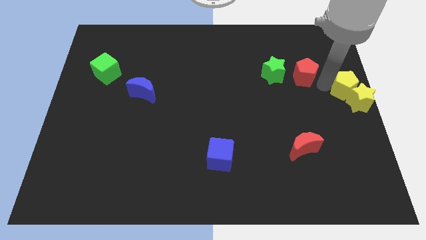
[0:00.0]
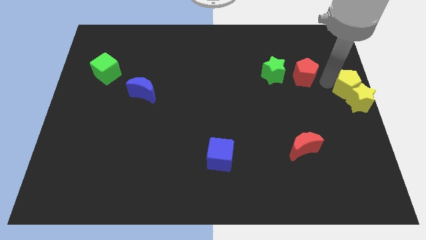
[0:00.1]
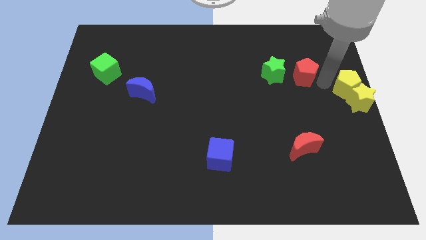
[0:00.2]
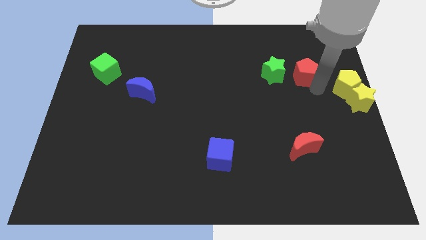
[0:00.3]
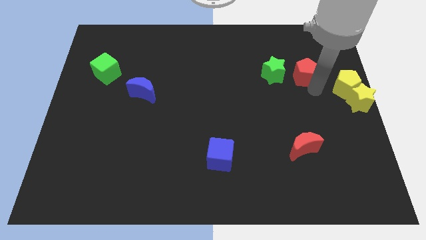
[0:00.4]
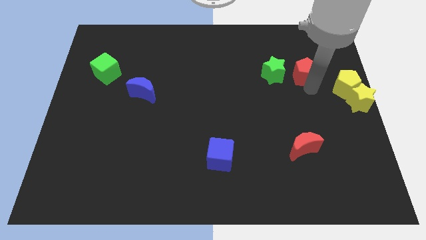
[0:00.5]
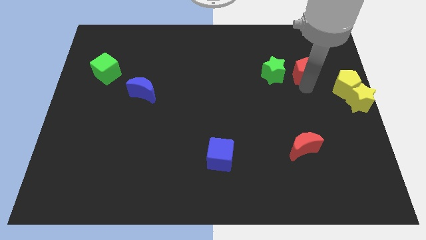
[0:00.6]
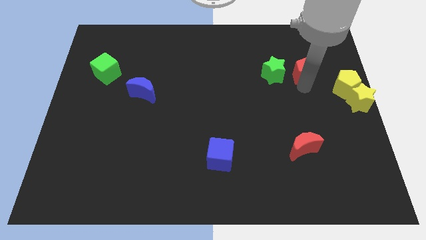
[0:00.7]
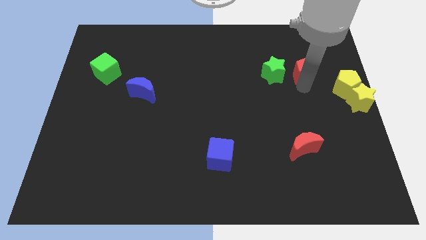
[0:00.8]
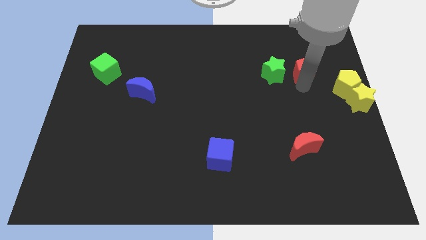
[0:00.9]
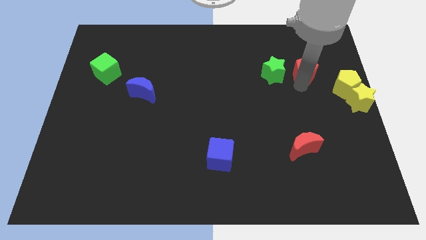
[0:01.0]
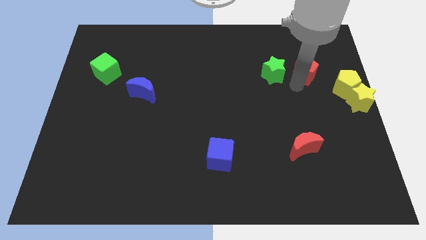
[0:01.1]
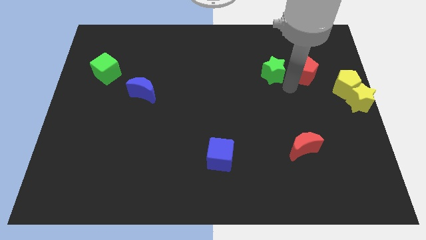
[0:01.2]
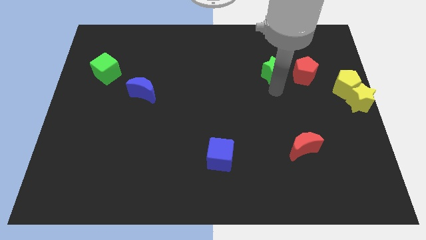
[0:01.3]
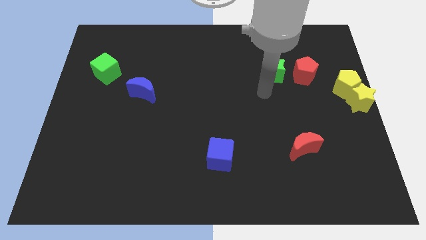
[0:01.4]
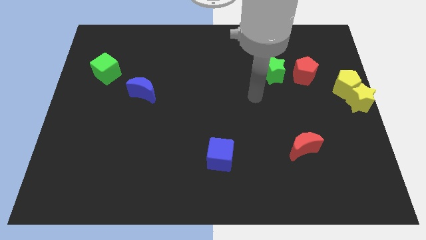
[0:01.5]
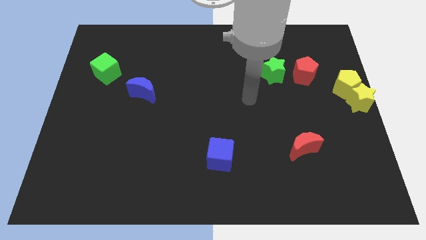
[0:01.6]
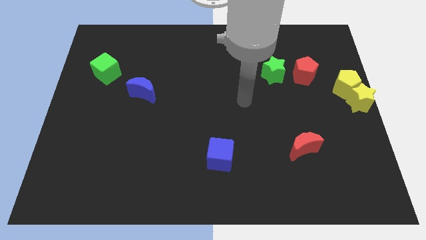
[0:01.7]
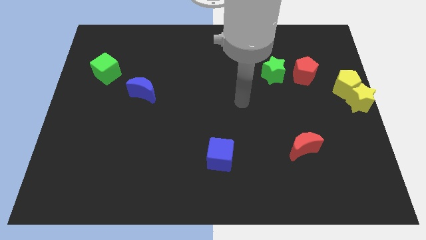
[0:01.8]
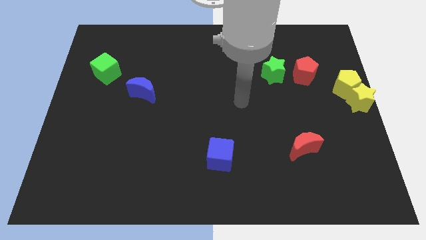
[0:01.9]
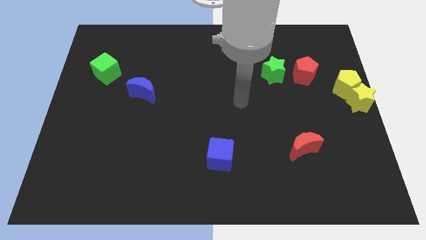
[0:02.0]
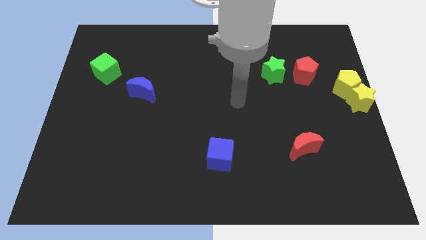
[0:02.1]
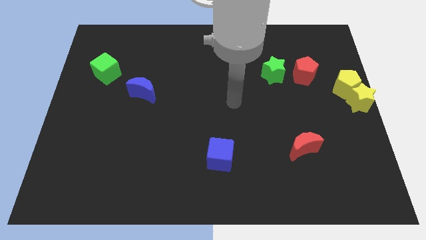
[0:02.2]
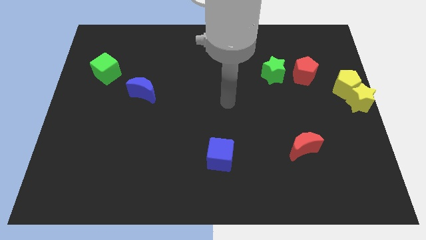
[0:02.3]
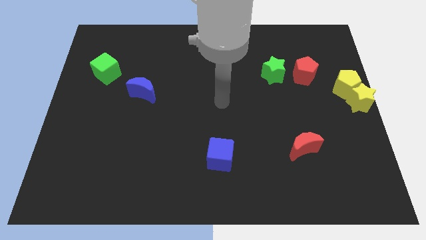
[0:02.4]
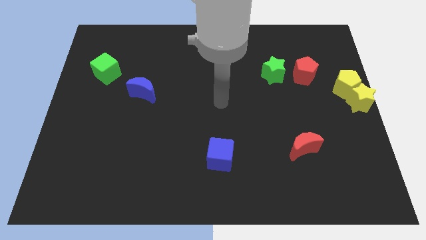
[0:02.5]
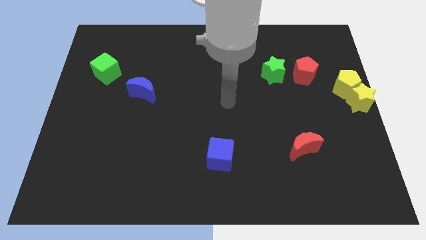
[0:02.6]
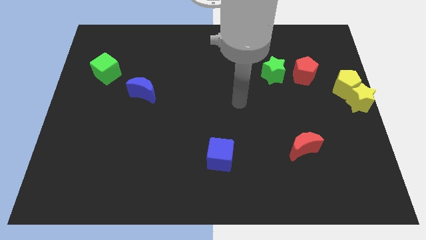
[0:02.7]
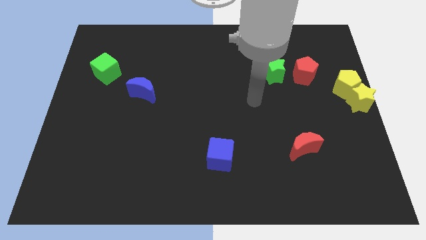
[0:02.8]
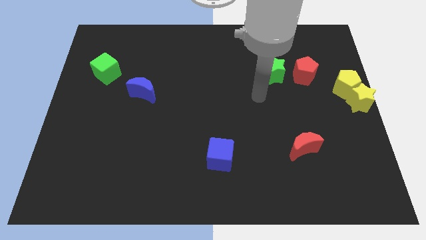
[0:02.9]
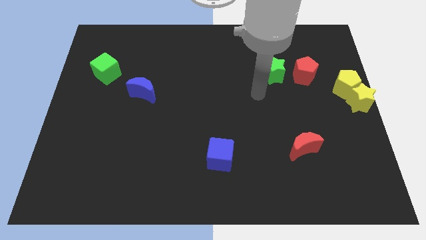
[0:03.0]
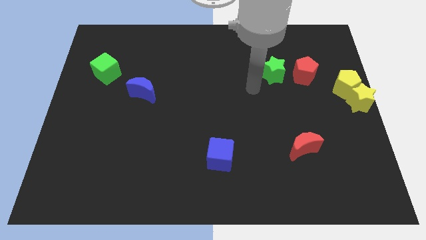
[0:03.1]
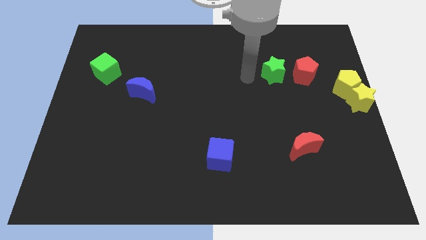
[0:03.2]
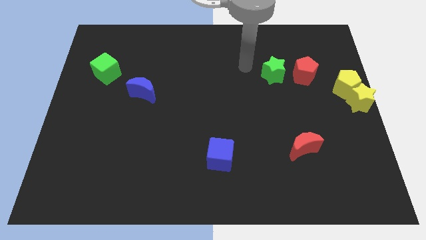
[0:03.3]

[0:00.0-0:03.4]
place your arm parallel left to the green star

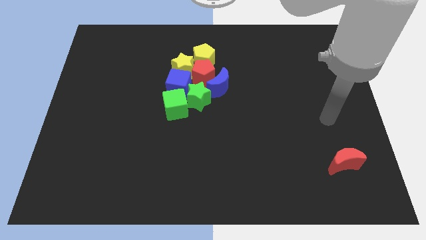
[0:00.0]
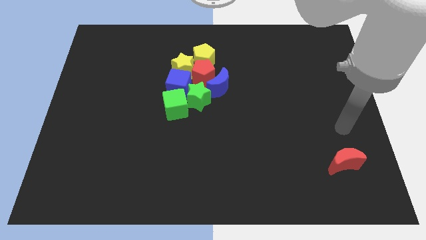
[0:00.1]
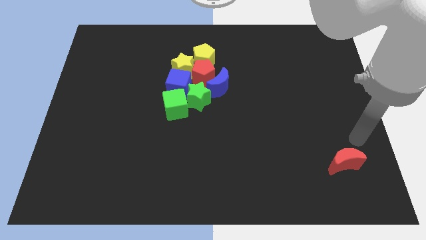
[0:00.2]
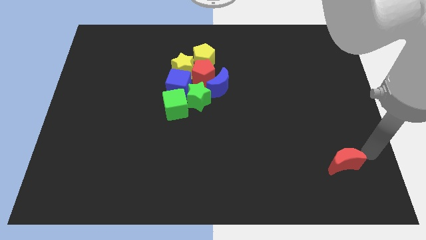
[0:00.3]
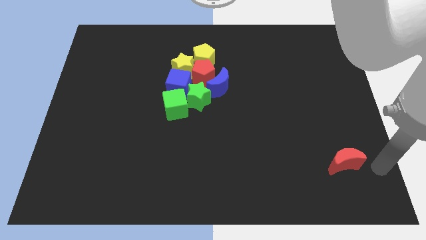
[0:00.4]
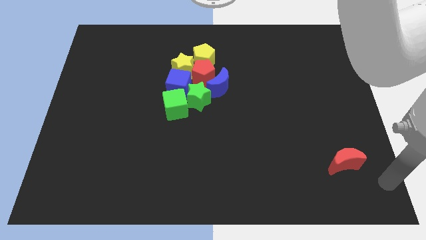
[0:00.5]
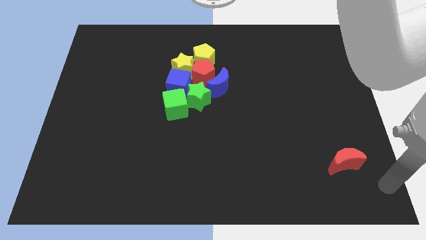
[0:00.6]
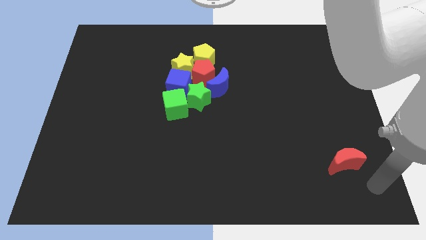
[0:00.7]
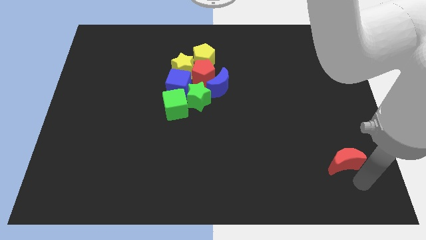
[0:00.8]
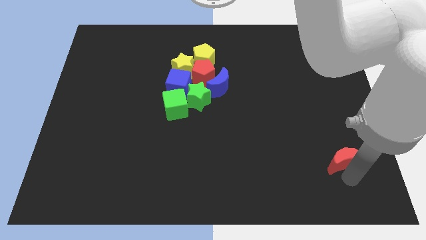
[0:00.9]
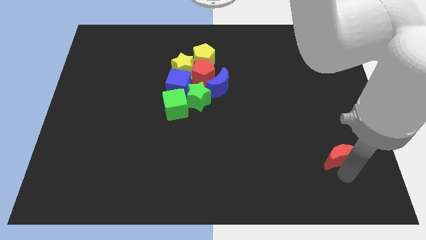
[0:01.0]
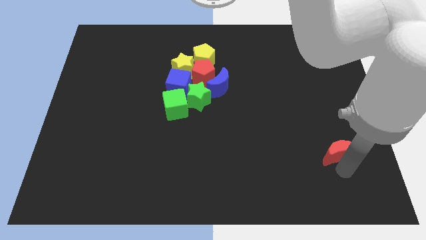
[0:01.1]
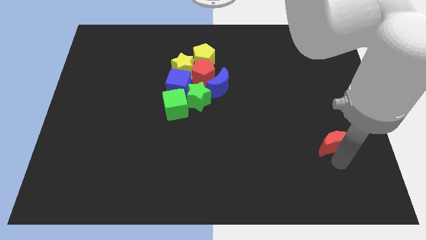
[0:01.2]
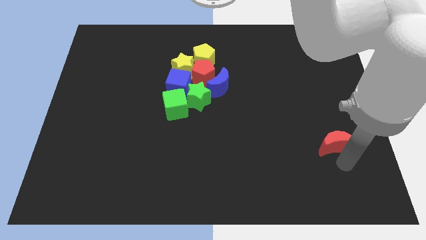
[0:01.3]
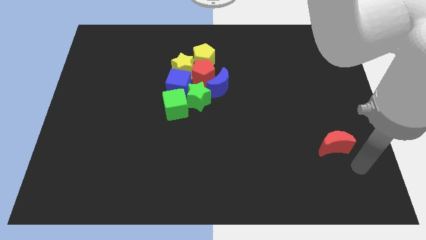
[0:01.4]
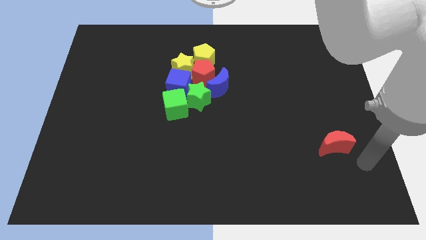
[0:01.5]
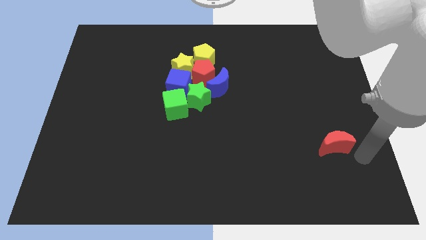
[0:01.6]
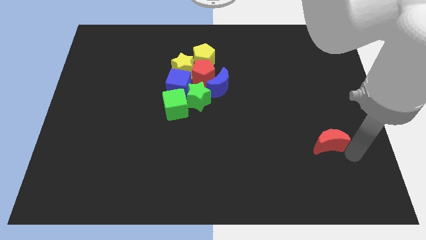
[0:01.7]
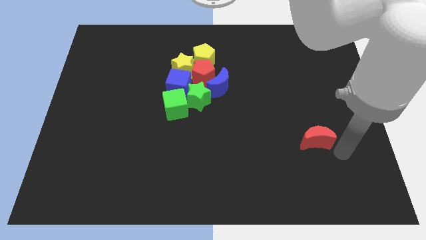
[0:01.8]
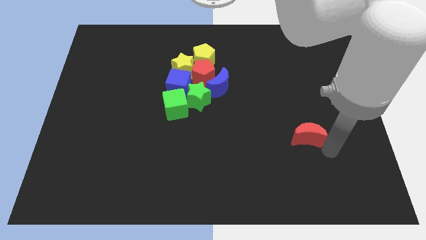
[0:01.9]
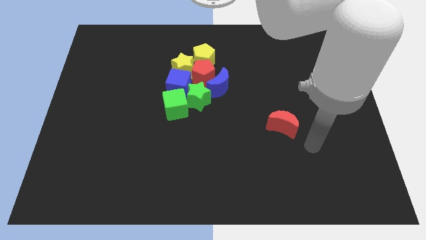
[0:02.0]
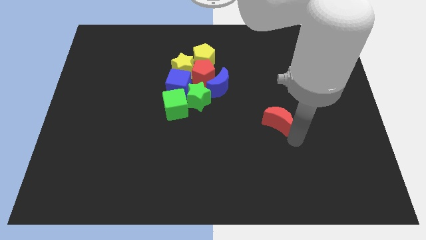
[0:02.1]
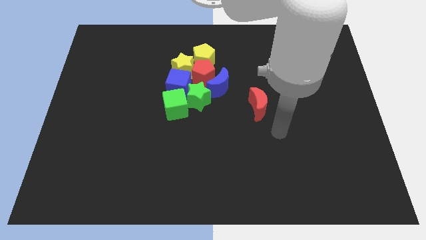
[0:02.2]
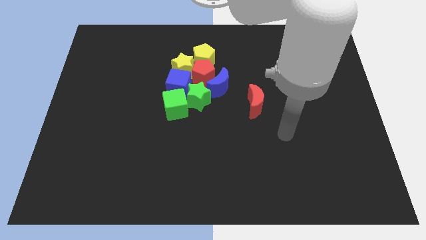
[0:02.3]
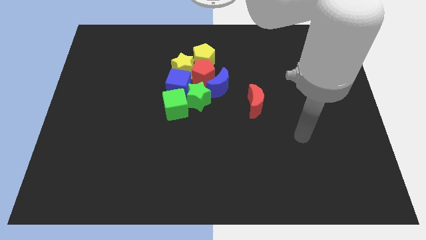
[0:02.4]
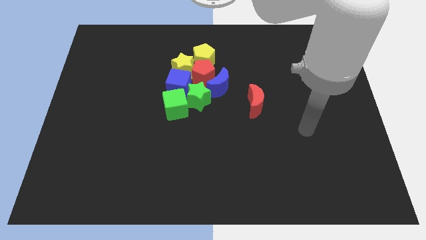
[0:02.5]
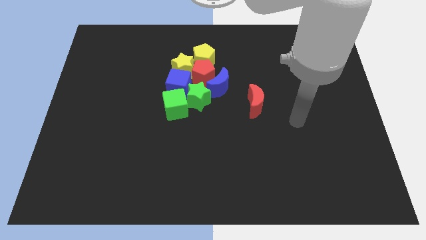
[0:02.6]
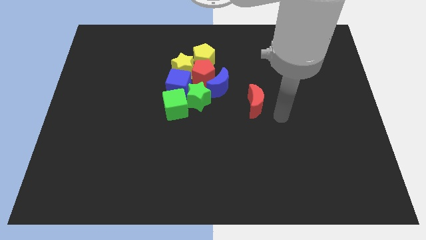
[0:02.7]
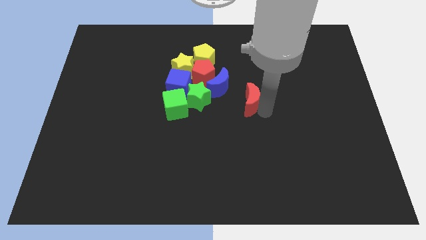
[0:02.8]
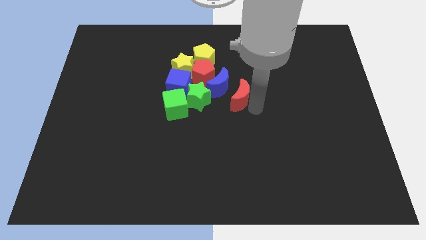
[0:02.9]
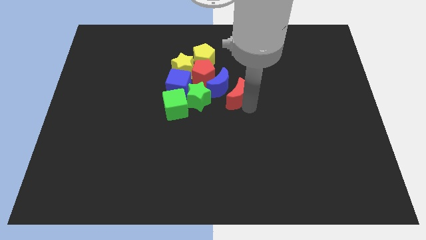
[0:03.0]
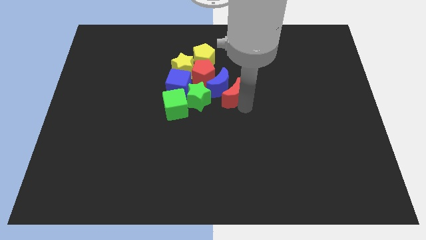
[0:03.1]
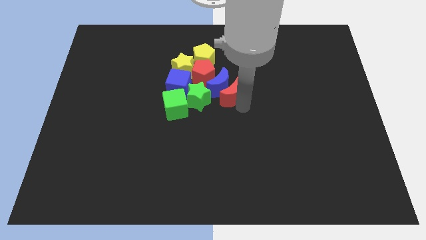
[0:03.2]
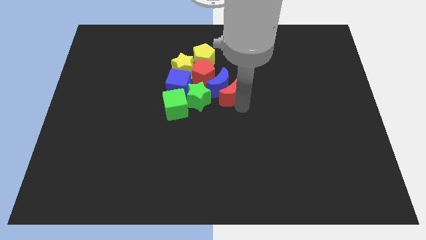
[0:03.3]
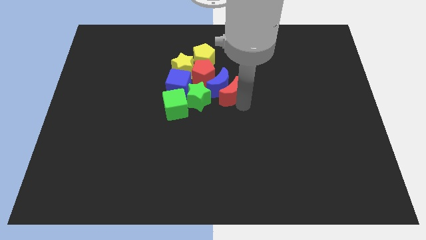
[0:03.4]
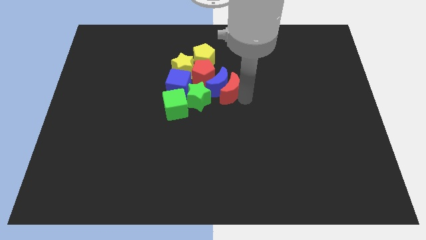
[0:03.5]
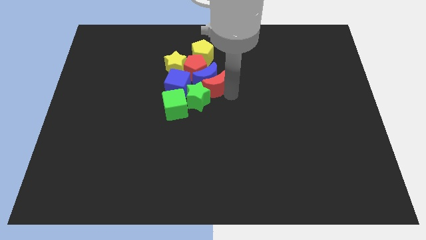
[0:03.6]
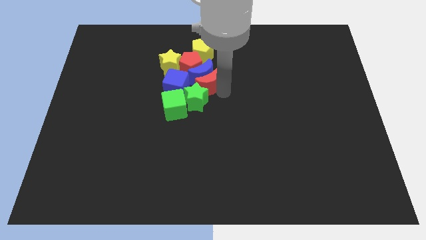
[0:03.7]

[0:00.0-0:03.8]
push the red moon into the blue moon

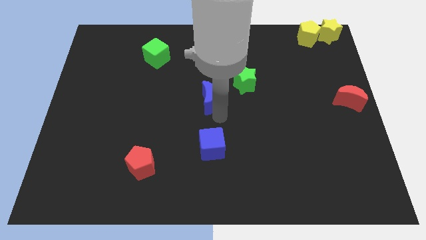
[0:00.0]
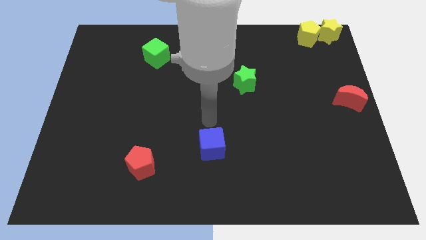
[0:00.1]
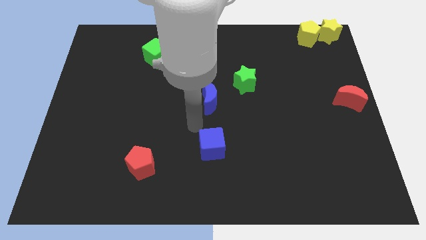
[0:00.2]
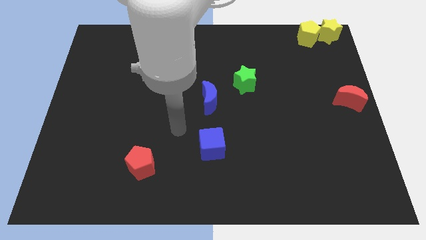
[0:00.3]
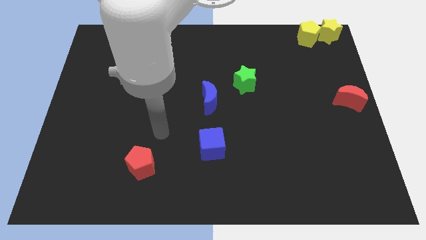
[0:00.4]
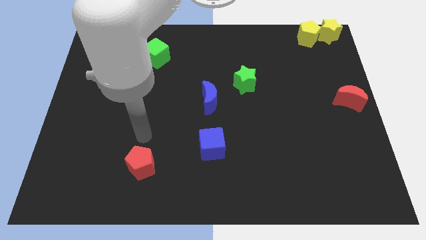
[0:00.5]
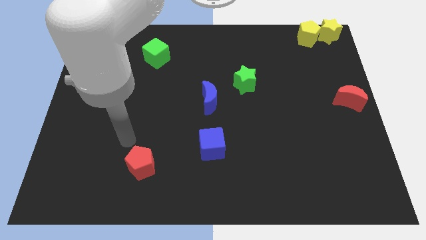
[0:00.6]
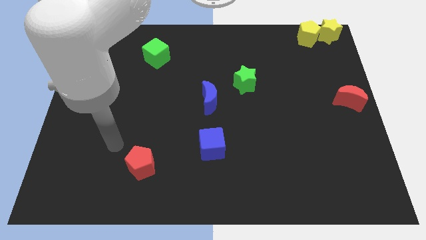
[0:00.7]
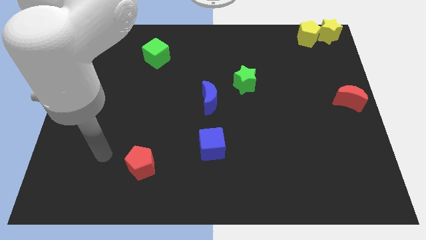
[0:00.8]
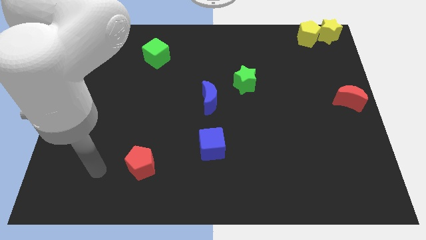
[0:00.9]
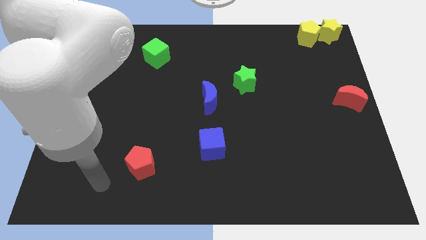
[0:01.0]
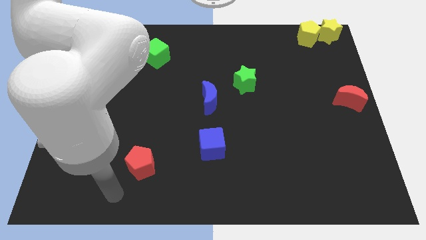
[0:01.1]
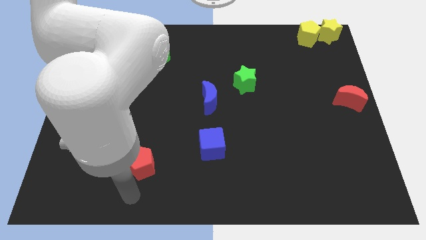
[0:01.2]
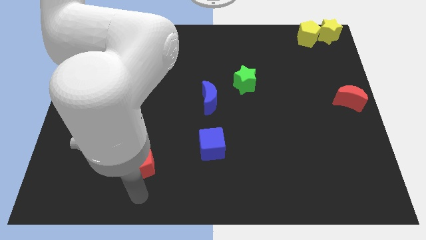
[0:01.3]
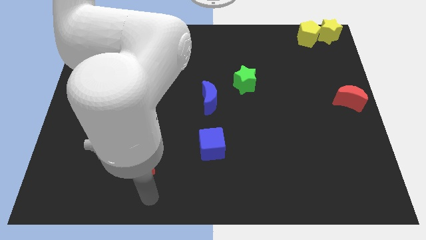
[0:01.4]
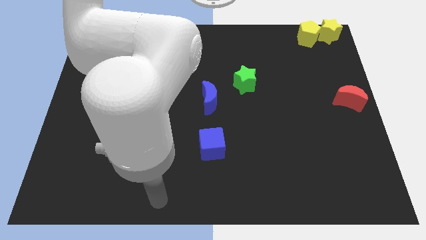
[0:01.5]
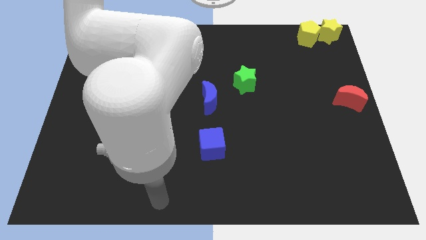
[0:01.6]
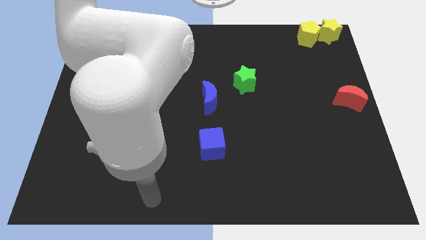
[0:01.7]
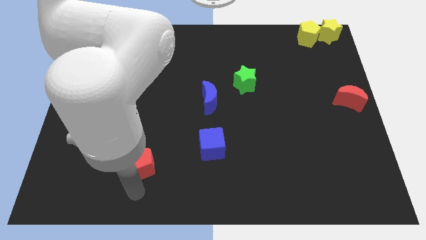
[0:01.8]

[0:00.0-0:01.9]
move the arm towards the red pentagon
